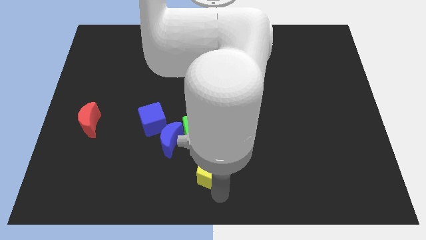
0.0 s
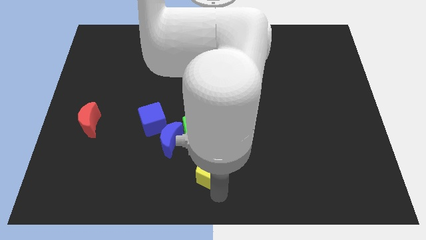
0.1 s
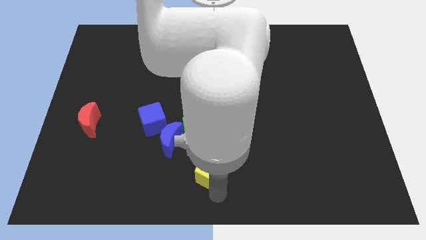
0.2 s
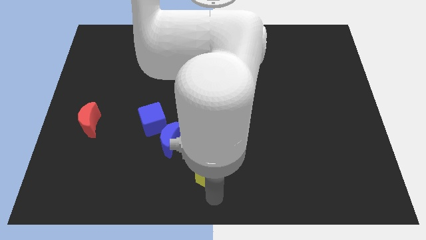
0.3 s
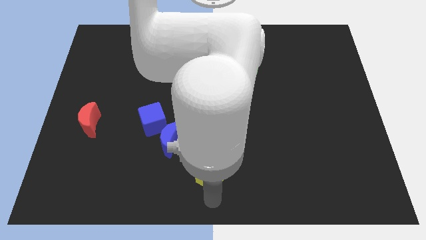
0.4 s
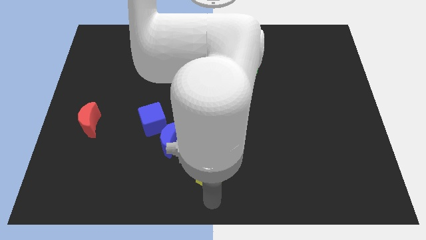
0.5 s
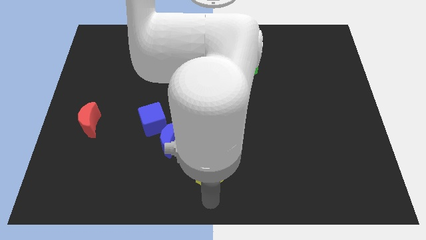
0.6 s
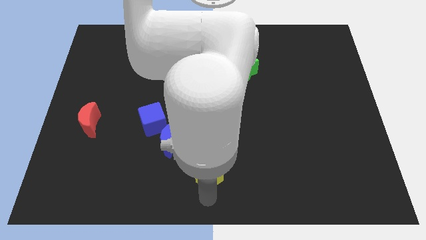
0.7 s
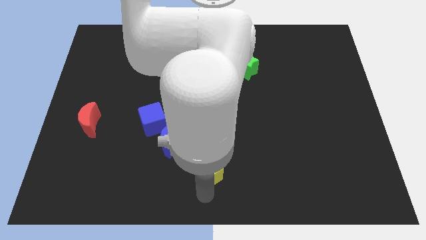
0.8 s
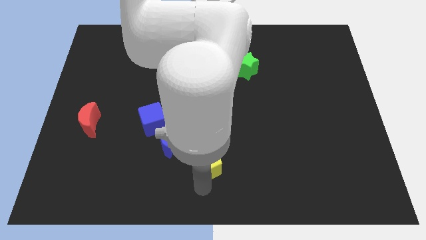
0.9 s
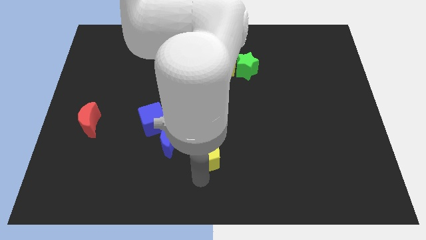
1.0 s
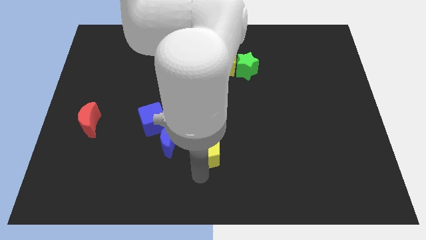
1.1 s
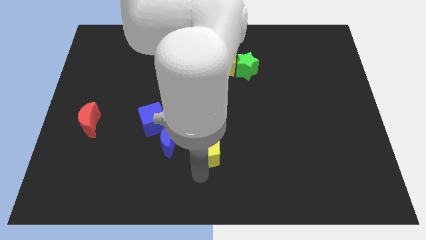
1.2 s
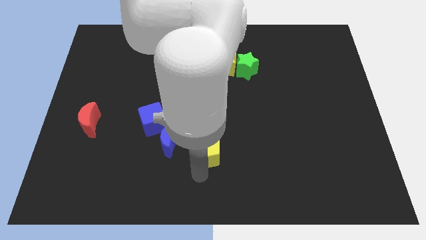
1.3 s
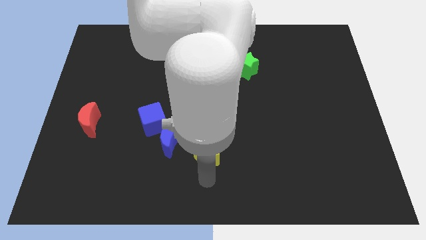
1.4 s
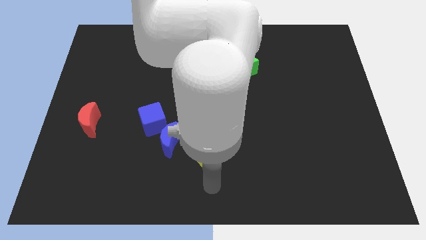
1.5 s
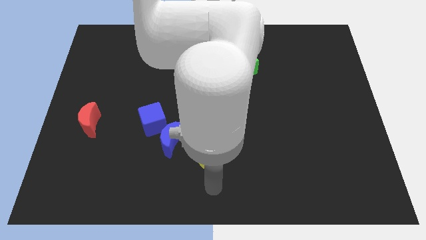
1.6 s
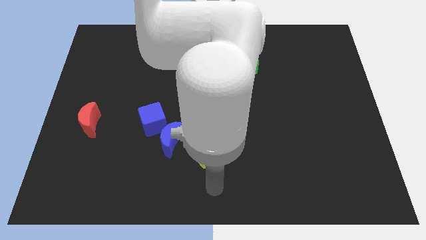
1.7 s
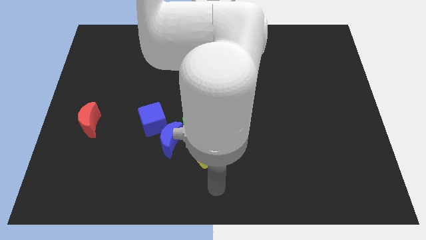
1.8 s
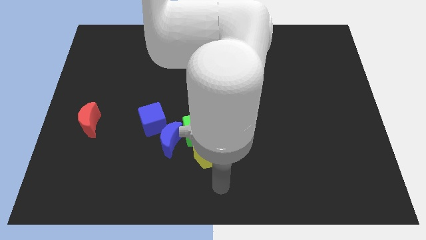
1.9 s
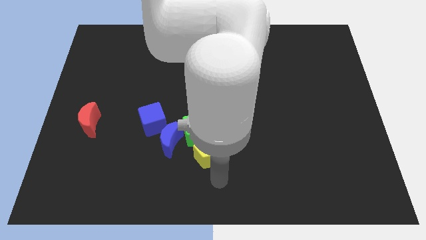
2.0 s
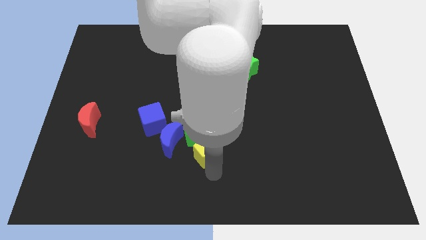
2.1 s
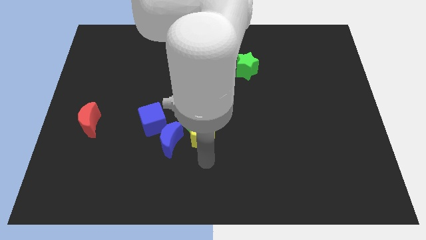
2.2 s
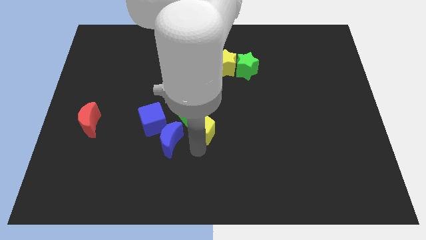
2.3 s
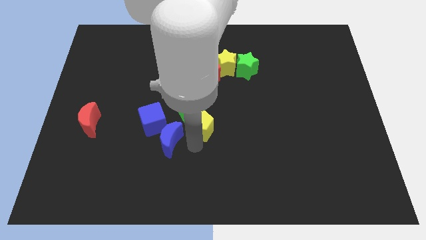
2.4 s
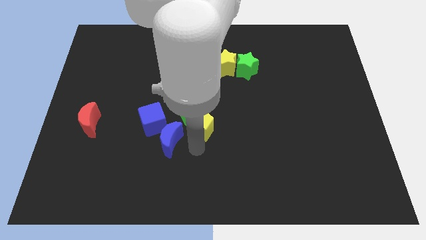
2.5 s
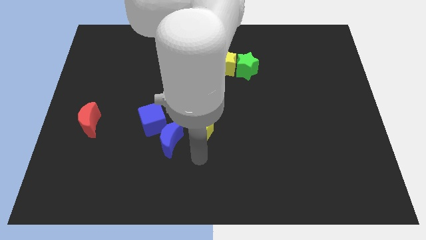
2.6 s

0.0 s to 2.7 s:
push the green cube and yellow pentagon towards the center of the board

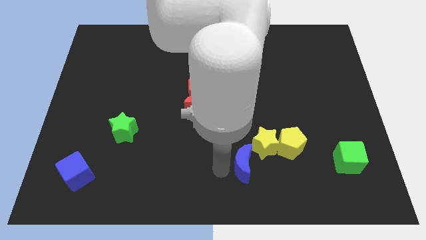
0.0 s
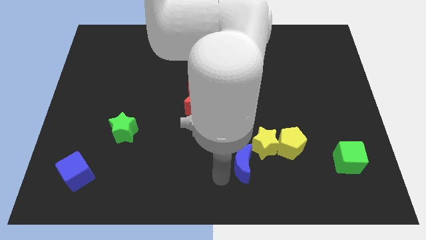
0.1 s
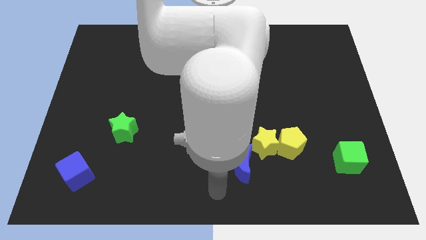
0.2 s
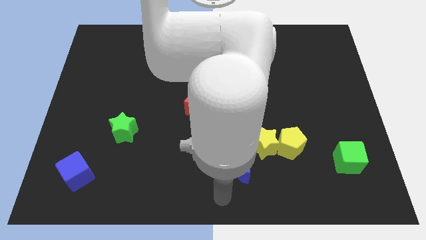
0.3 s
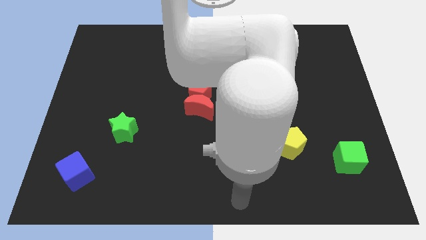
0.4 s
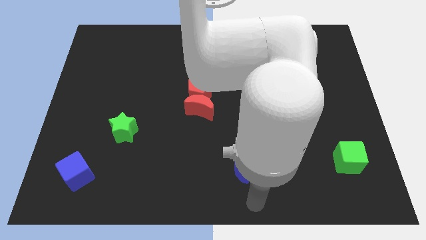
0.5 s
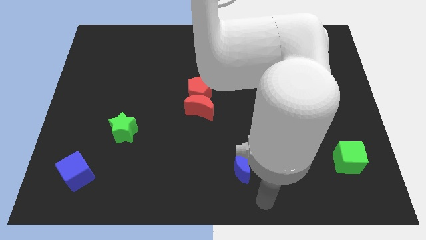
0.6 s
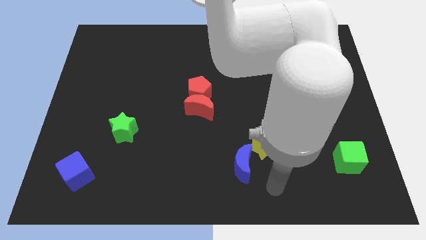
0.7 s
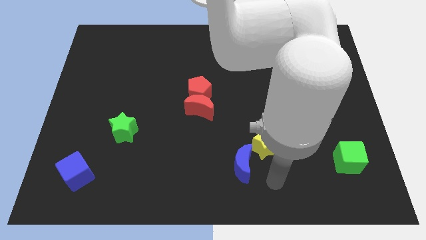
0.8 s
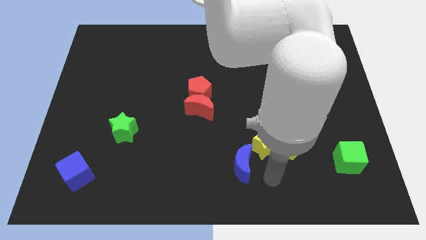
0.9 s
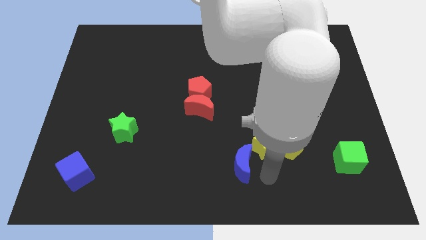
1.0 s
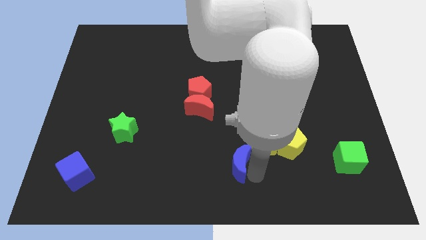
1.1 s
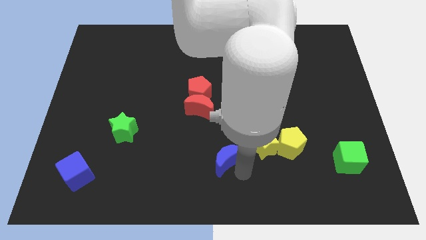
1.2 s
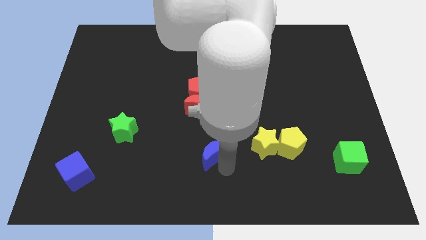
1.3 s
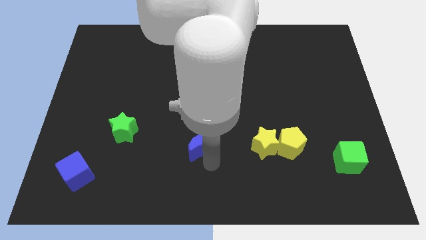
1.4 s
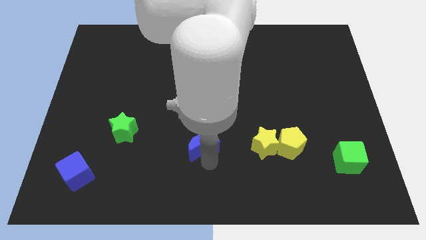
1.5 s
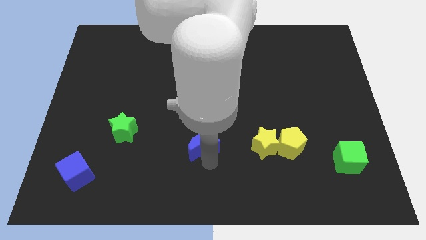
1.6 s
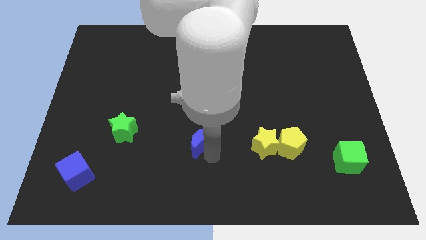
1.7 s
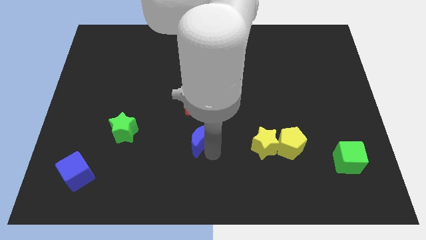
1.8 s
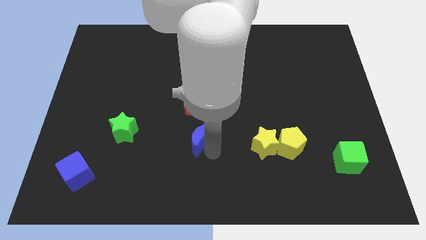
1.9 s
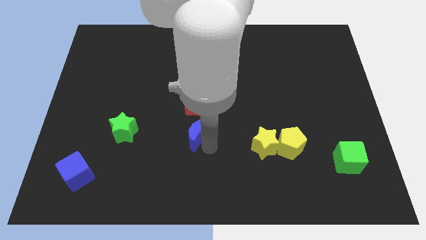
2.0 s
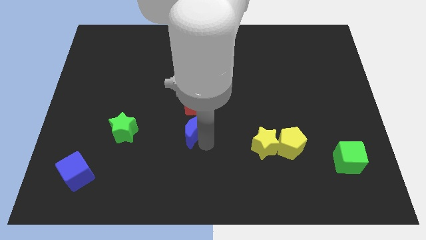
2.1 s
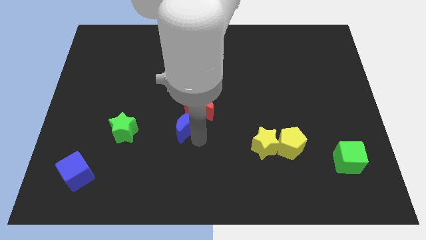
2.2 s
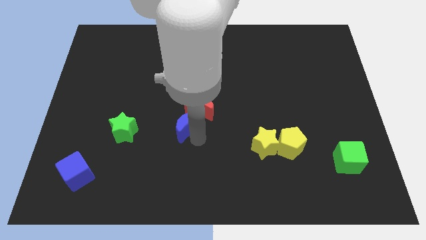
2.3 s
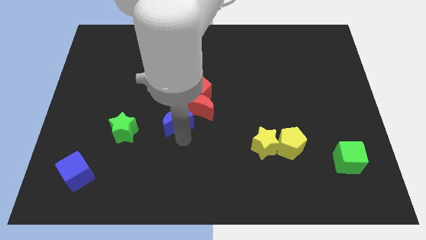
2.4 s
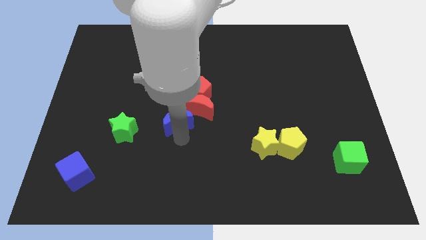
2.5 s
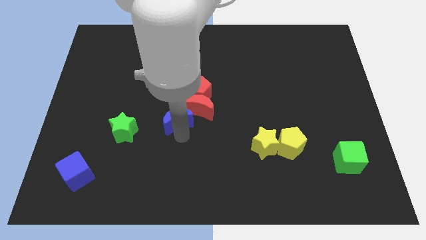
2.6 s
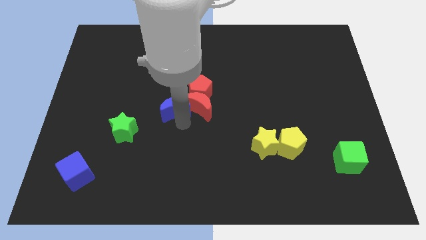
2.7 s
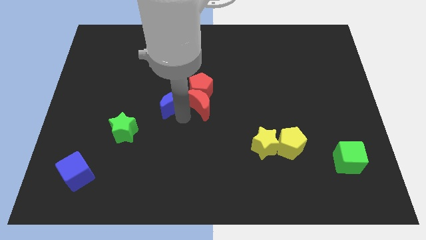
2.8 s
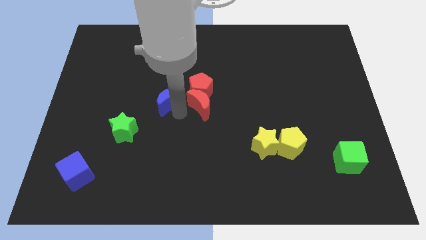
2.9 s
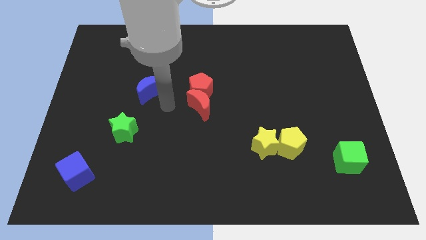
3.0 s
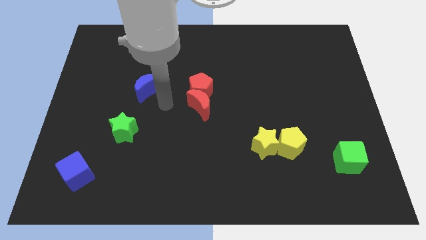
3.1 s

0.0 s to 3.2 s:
move the blue moon diagonally to the top right of the green star

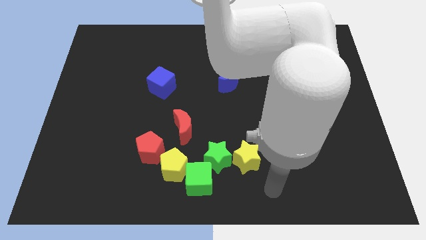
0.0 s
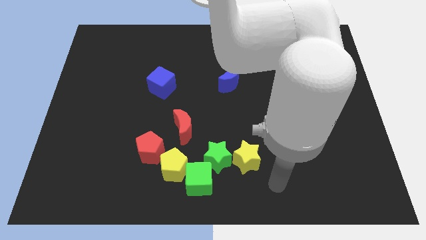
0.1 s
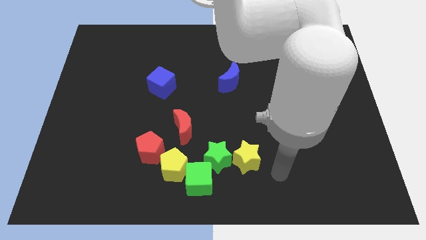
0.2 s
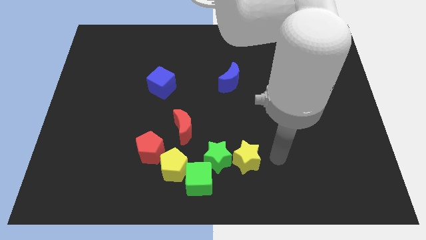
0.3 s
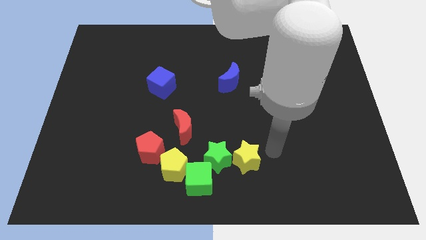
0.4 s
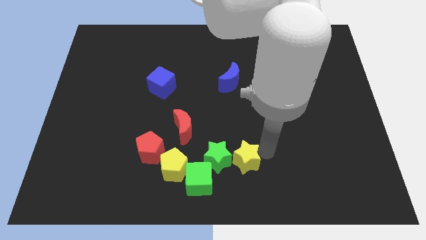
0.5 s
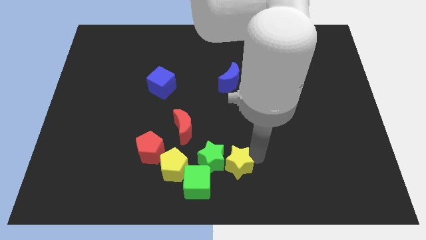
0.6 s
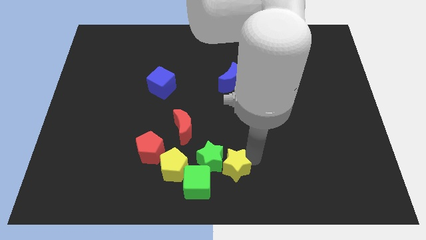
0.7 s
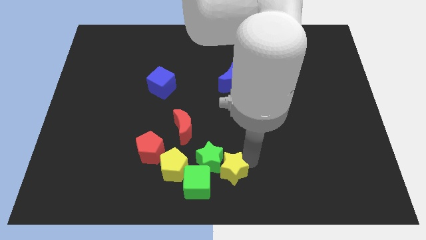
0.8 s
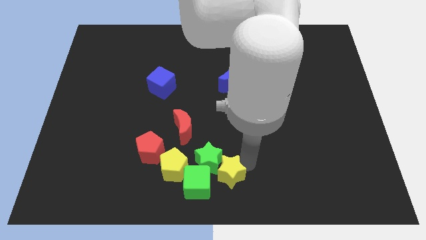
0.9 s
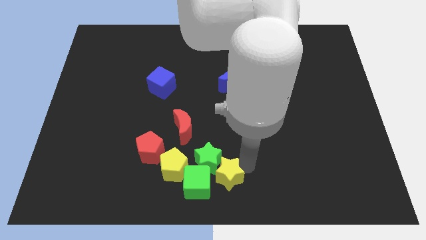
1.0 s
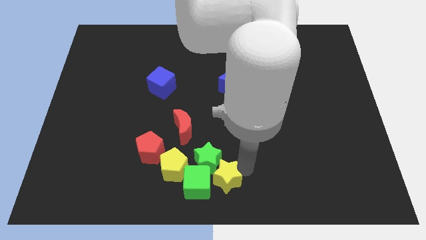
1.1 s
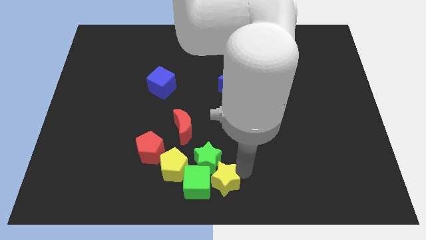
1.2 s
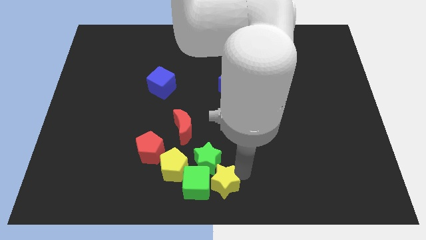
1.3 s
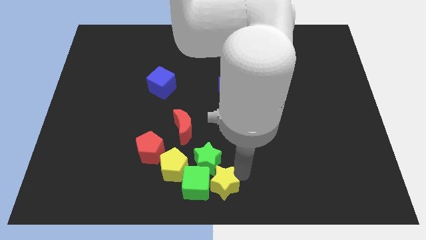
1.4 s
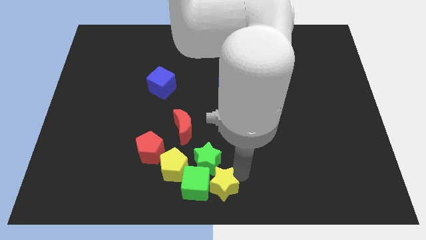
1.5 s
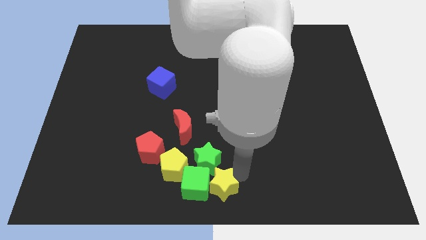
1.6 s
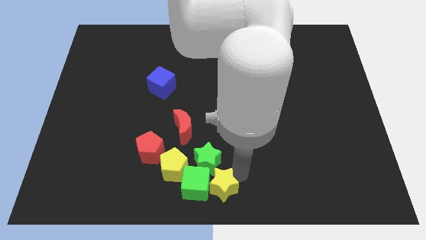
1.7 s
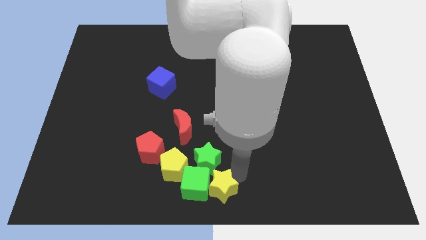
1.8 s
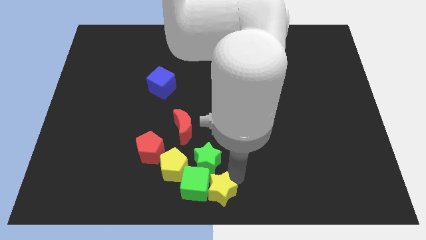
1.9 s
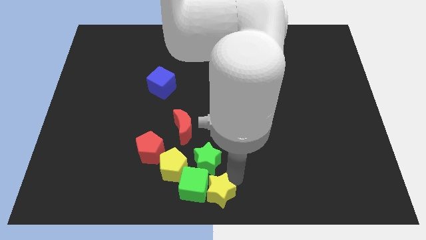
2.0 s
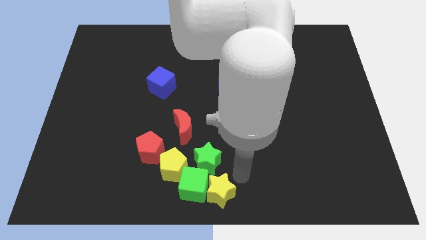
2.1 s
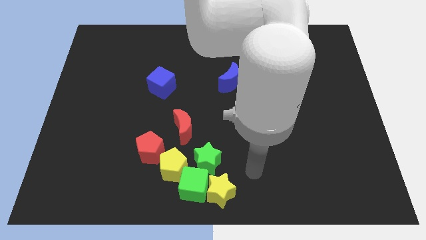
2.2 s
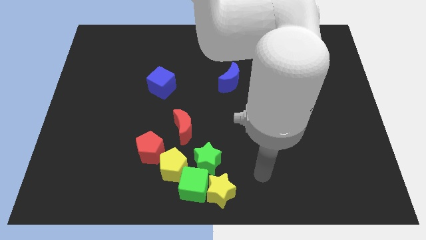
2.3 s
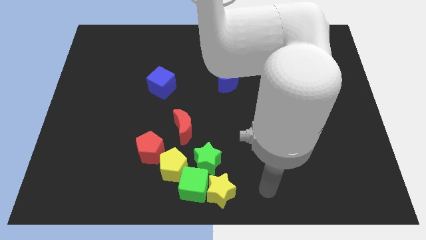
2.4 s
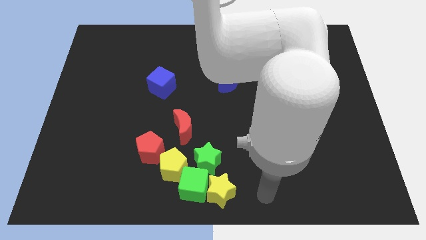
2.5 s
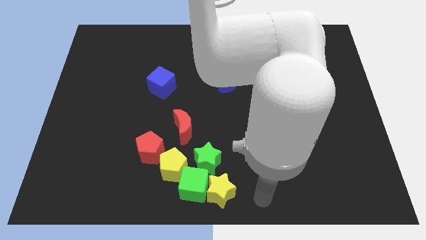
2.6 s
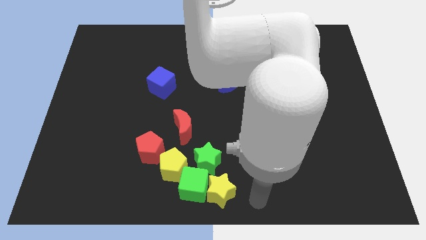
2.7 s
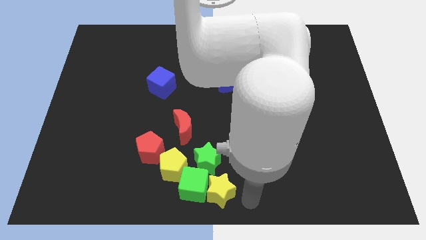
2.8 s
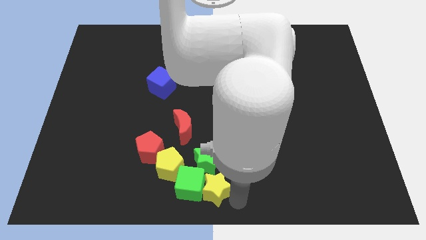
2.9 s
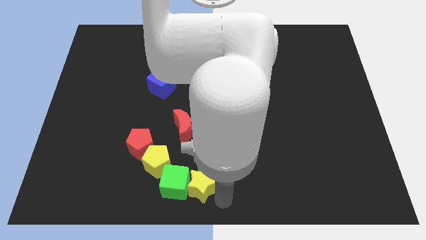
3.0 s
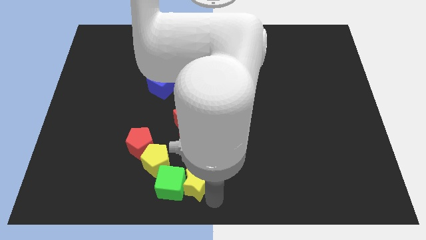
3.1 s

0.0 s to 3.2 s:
place yellow star into green cube
